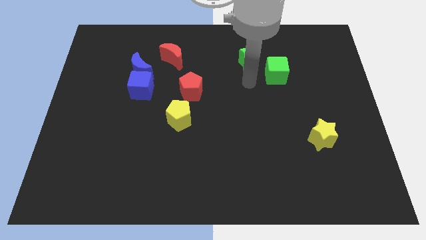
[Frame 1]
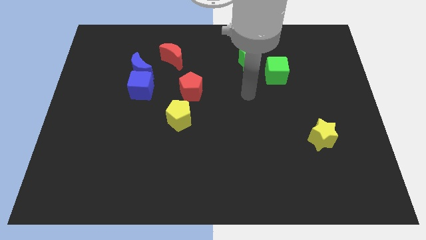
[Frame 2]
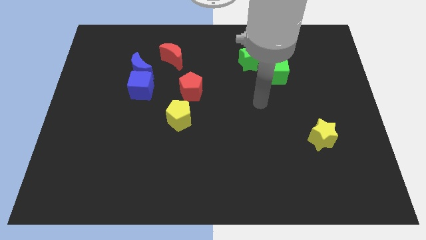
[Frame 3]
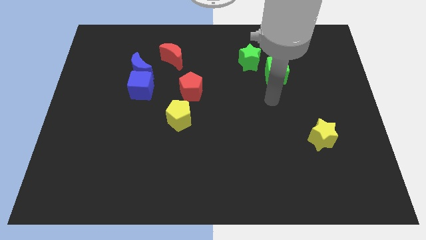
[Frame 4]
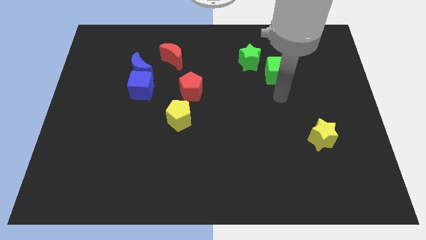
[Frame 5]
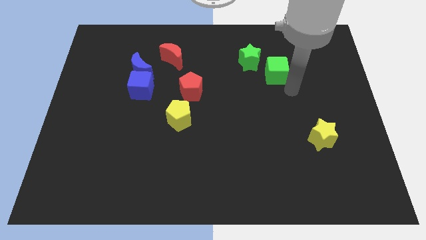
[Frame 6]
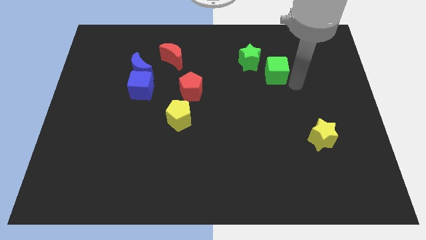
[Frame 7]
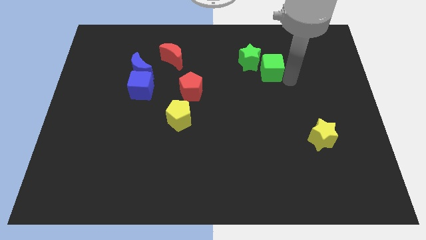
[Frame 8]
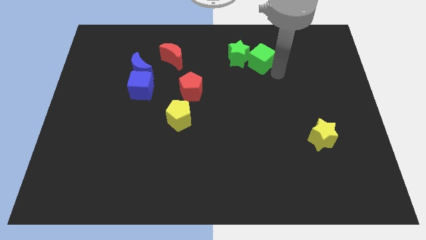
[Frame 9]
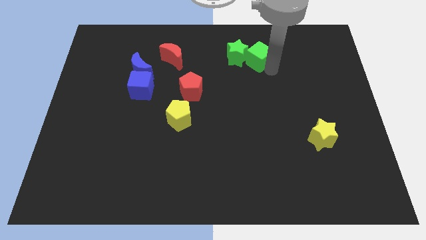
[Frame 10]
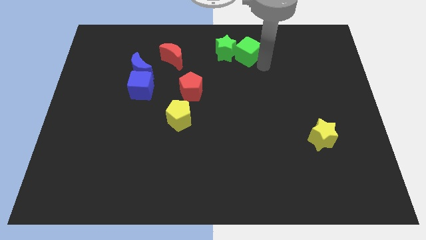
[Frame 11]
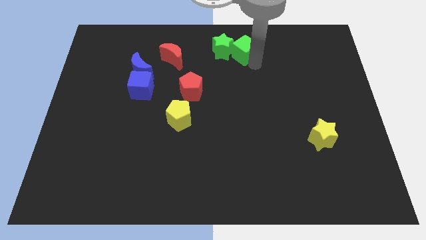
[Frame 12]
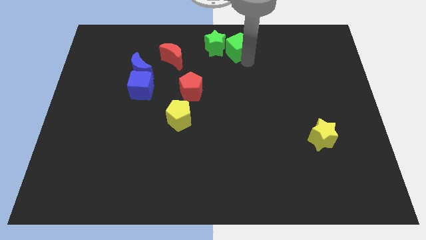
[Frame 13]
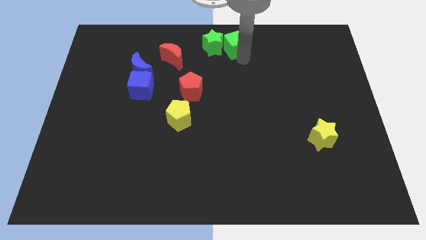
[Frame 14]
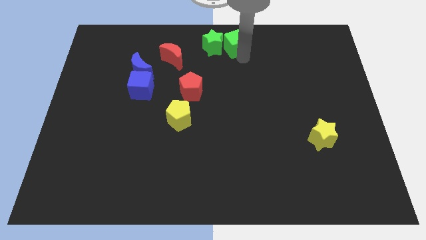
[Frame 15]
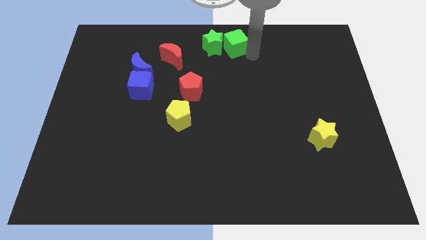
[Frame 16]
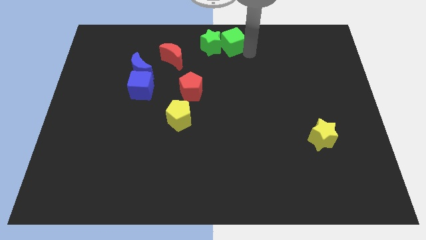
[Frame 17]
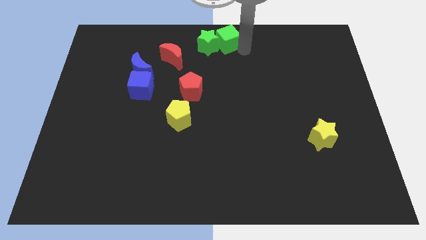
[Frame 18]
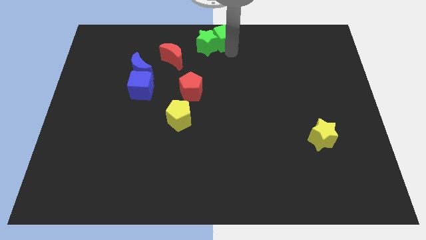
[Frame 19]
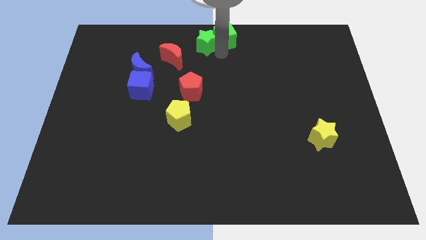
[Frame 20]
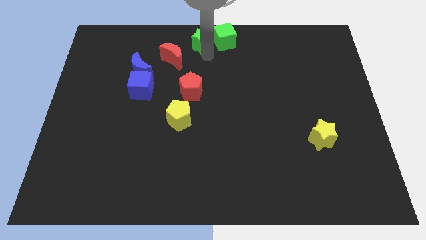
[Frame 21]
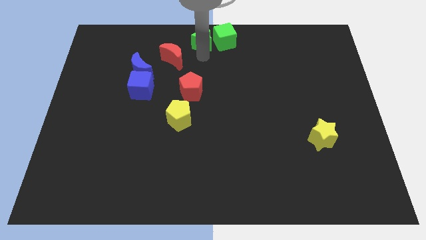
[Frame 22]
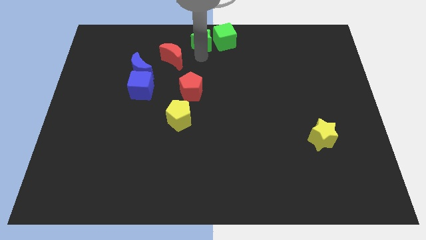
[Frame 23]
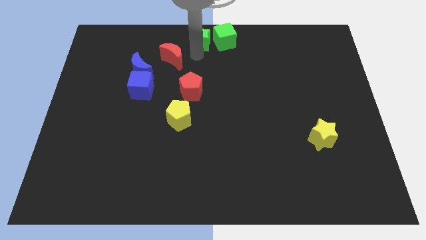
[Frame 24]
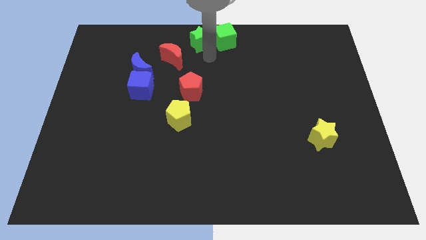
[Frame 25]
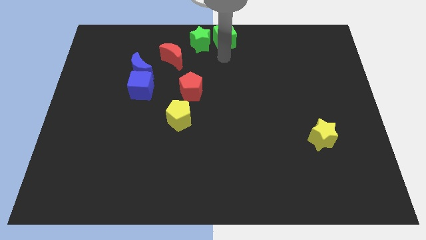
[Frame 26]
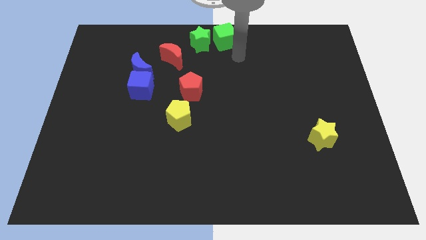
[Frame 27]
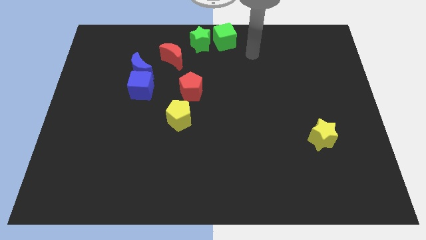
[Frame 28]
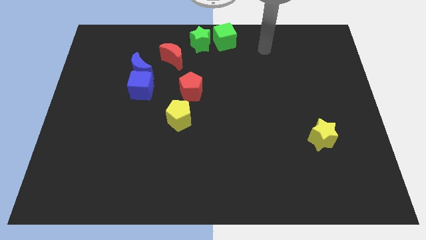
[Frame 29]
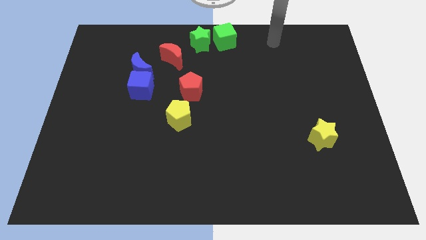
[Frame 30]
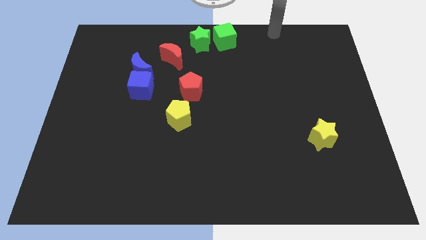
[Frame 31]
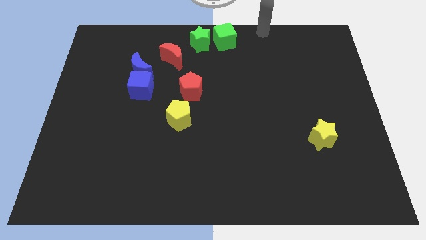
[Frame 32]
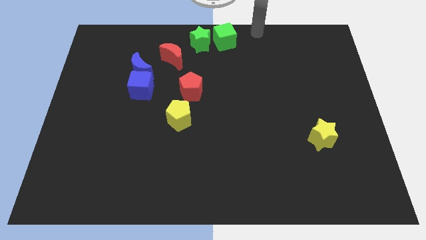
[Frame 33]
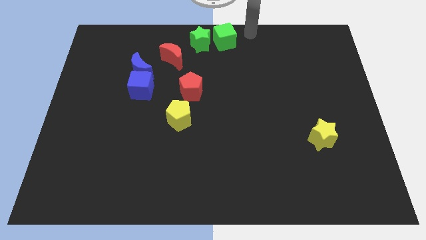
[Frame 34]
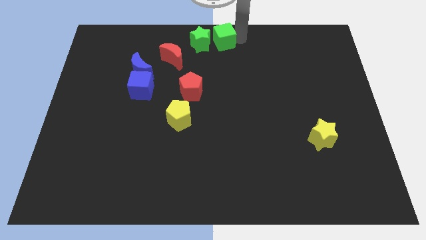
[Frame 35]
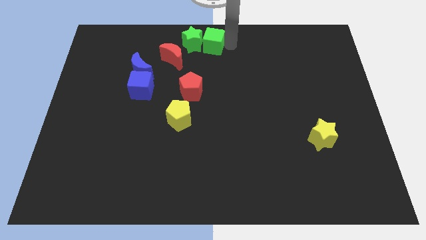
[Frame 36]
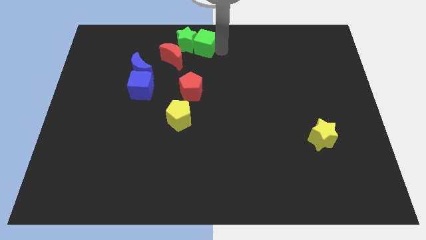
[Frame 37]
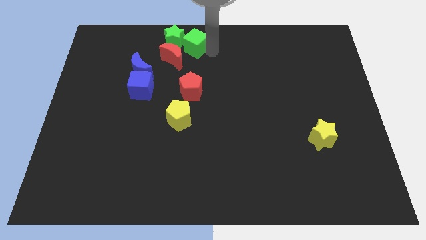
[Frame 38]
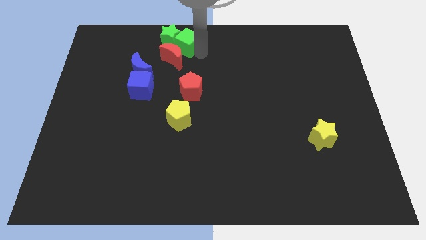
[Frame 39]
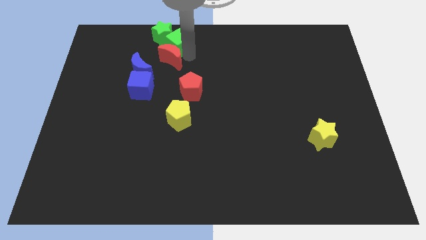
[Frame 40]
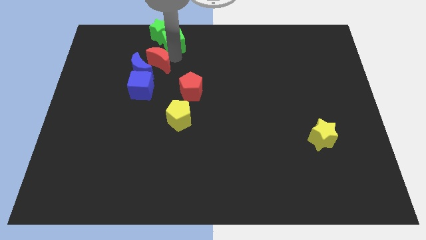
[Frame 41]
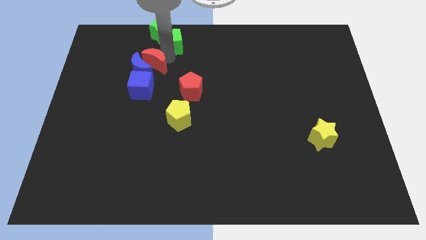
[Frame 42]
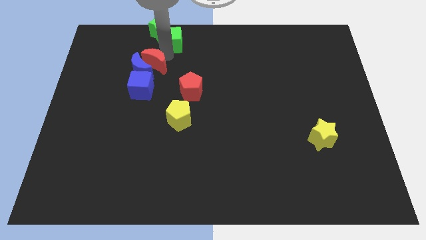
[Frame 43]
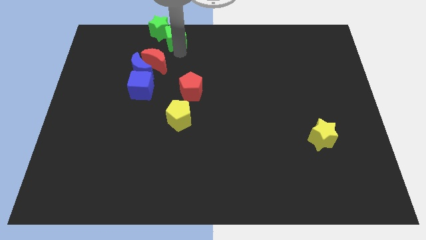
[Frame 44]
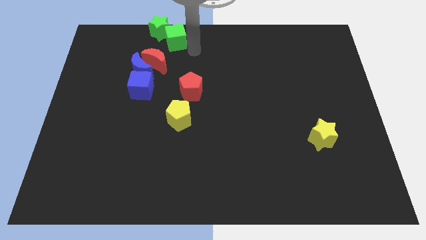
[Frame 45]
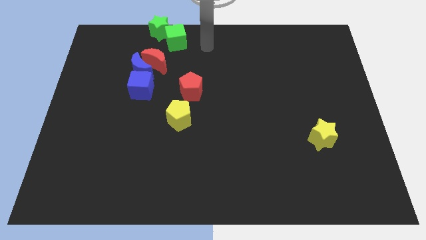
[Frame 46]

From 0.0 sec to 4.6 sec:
push the green cube and green star towards the top center of the board

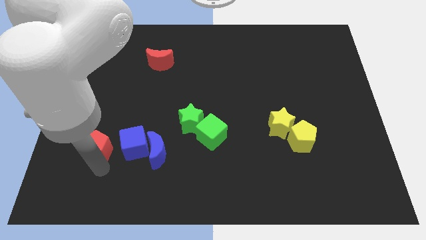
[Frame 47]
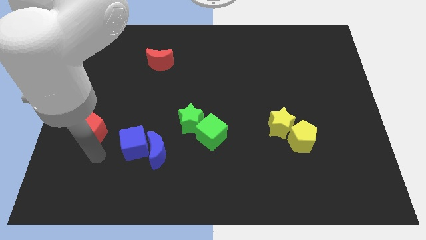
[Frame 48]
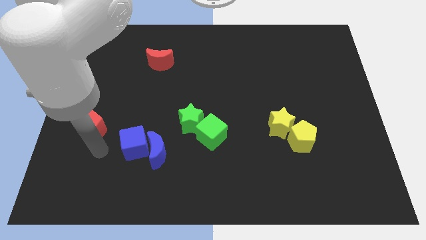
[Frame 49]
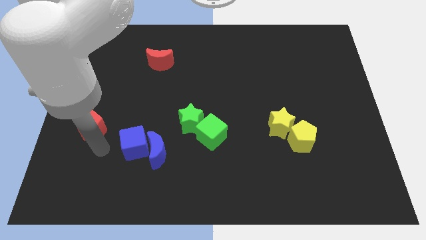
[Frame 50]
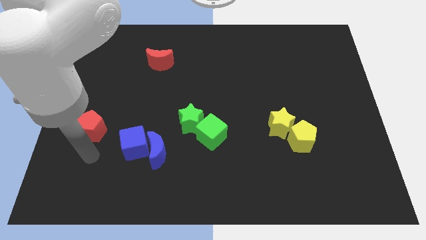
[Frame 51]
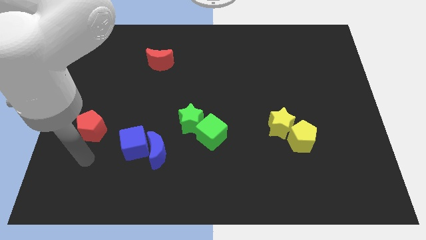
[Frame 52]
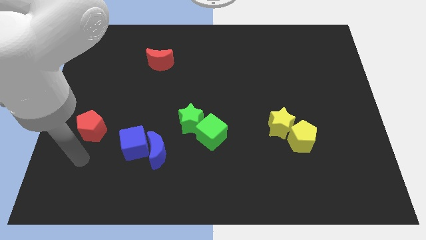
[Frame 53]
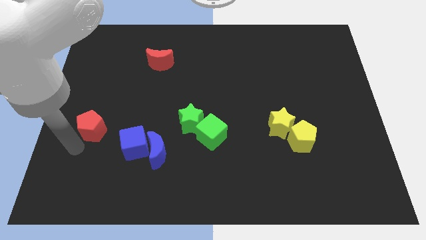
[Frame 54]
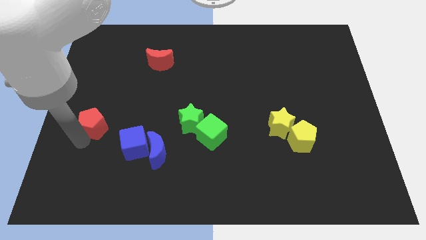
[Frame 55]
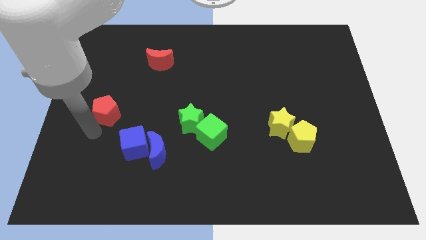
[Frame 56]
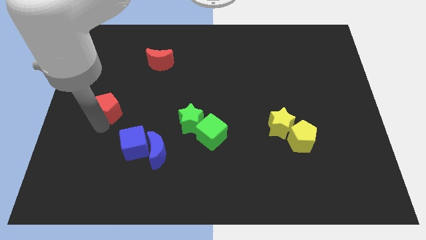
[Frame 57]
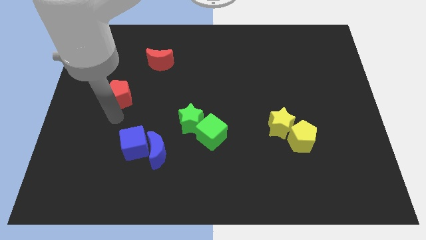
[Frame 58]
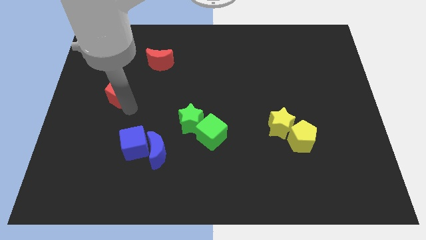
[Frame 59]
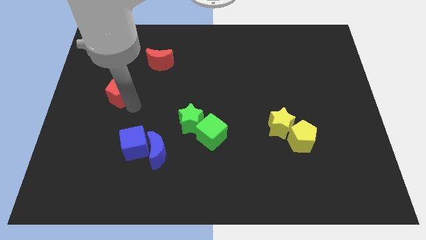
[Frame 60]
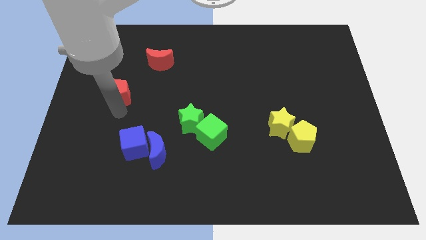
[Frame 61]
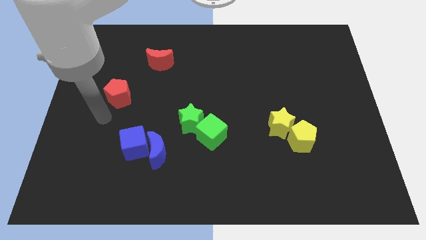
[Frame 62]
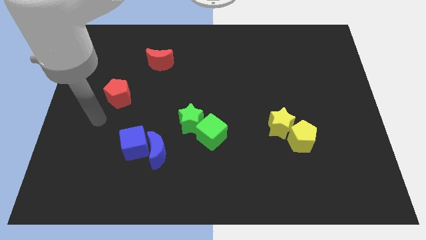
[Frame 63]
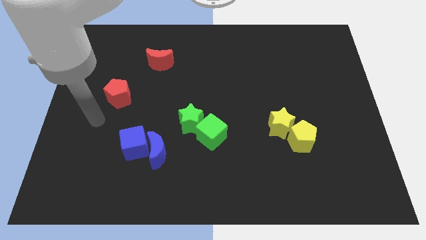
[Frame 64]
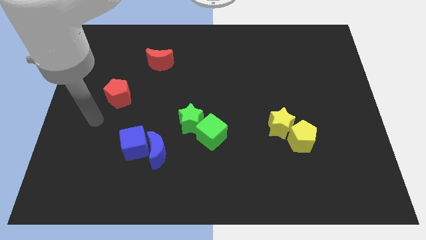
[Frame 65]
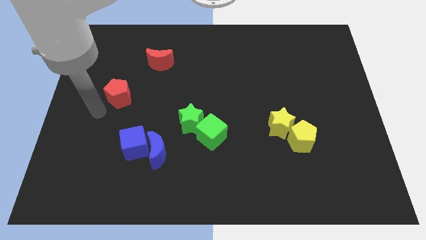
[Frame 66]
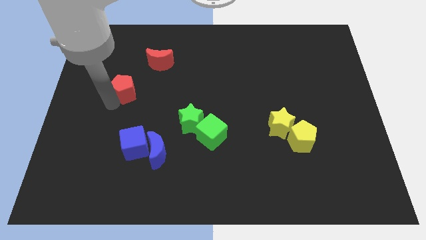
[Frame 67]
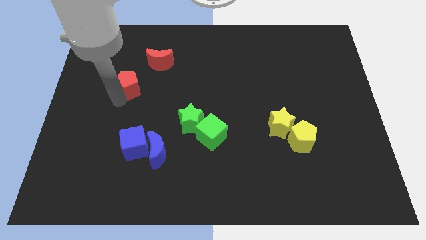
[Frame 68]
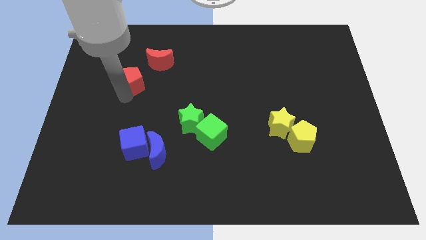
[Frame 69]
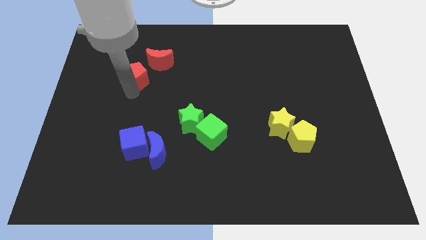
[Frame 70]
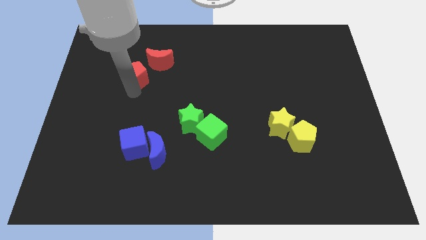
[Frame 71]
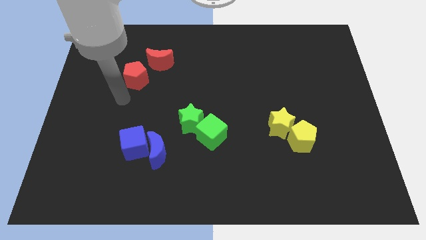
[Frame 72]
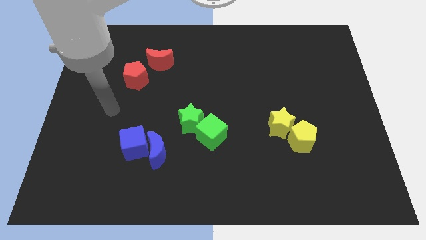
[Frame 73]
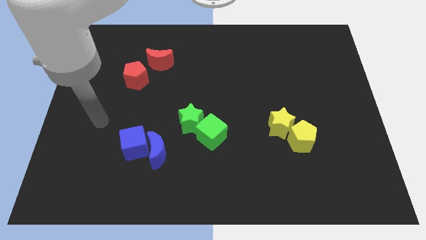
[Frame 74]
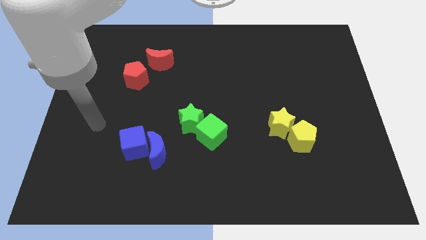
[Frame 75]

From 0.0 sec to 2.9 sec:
push red pentagon towards red crescent

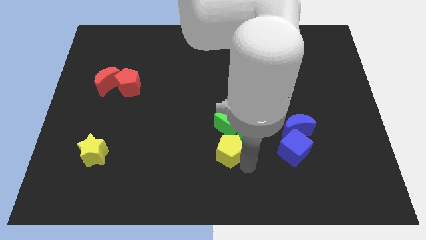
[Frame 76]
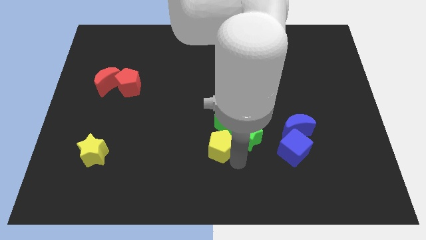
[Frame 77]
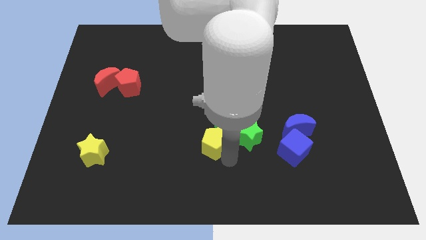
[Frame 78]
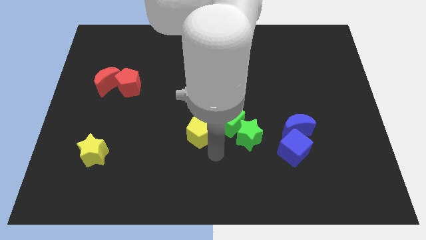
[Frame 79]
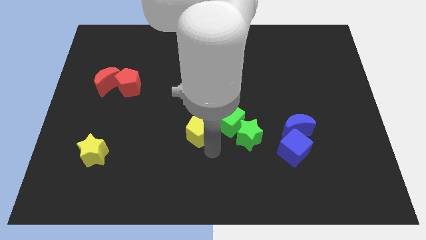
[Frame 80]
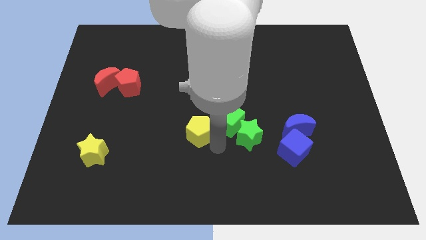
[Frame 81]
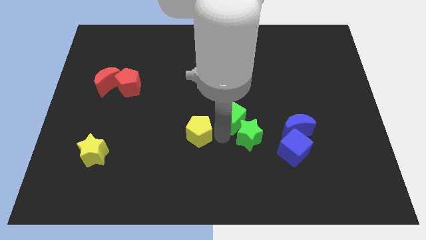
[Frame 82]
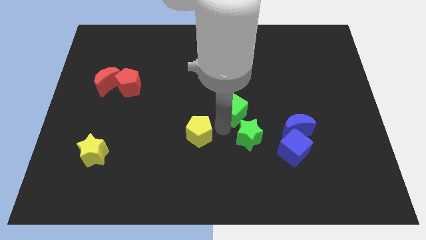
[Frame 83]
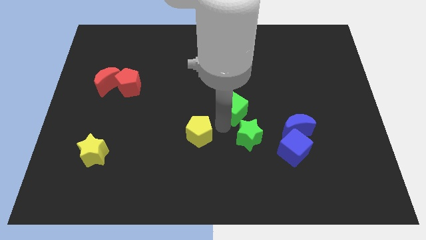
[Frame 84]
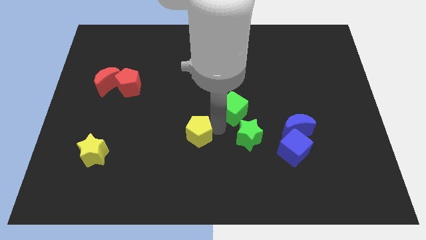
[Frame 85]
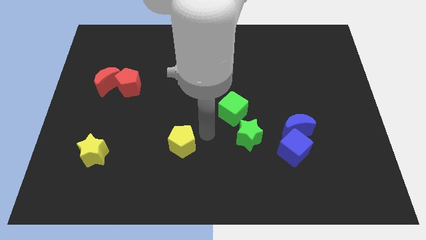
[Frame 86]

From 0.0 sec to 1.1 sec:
move the yellow pentagon and the green cube away from each other

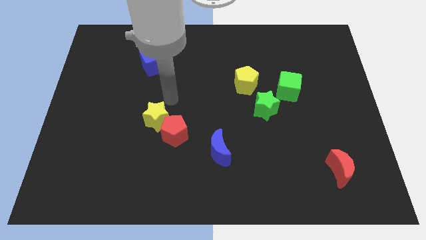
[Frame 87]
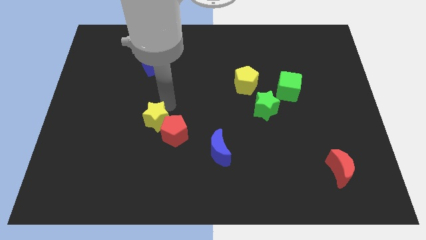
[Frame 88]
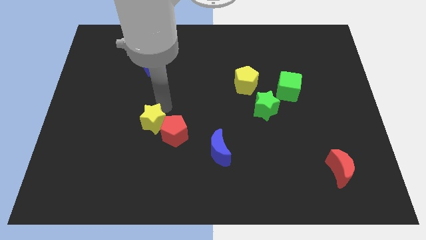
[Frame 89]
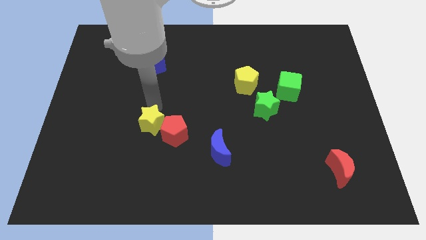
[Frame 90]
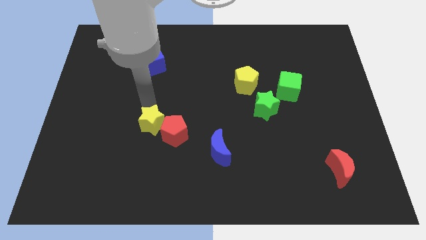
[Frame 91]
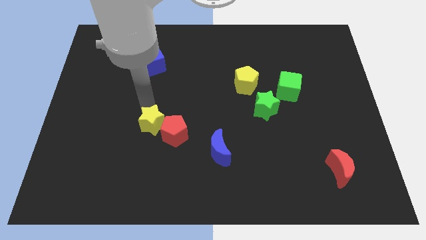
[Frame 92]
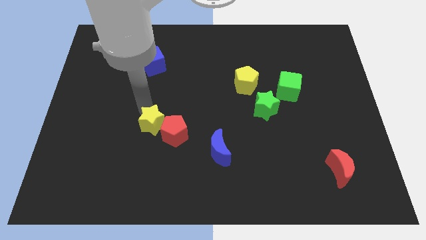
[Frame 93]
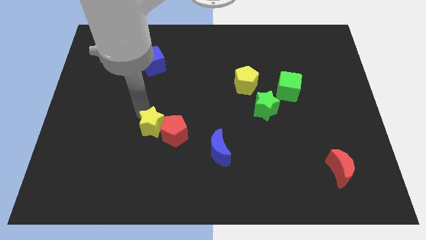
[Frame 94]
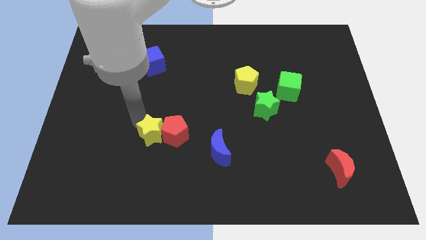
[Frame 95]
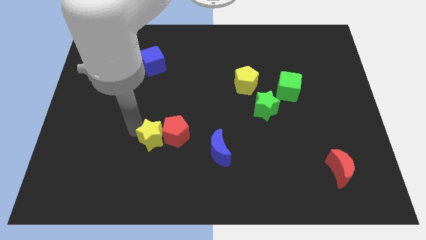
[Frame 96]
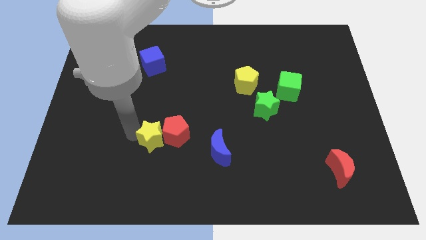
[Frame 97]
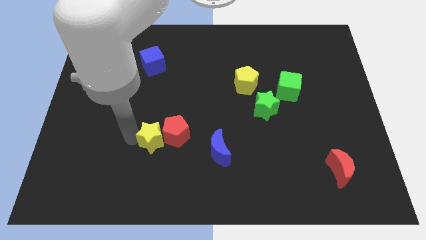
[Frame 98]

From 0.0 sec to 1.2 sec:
put the yellow star left of the red pentagon
